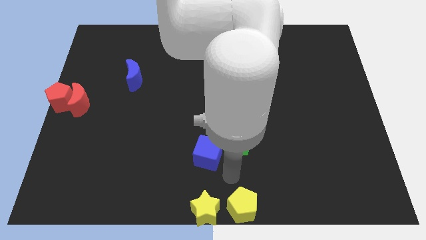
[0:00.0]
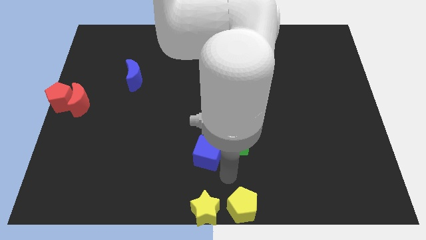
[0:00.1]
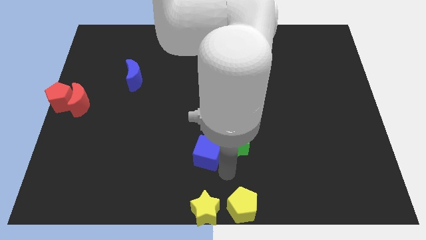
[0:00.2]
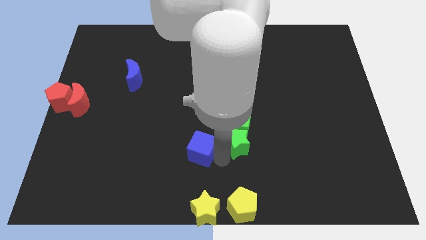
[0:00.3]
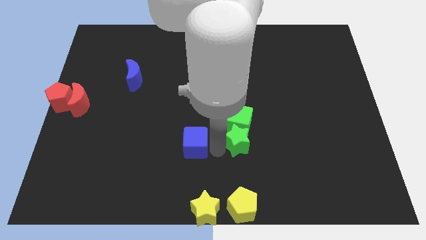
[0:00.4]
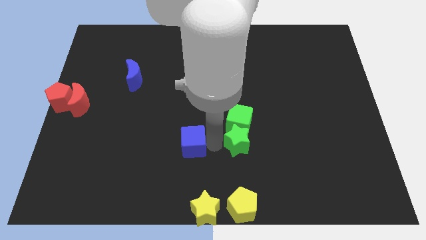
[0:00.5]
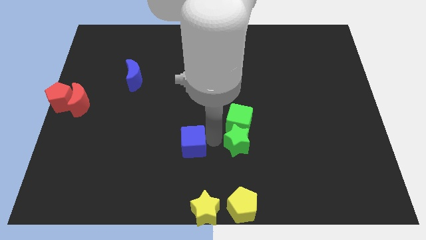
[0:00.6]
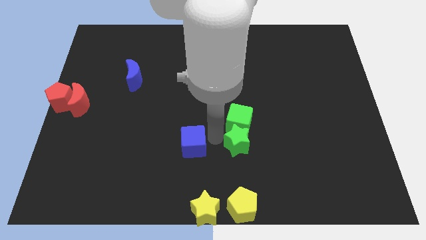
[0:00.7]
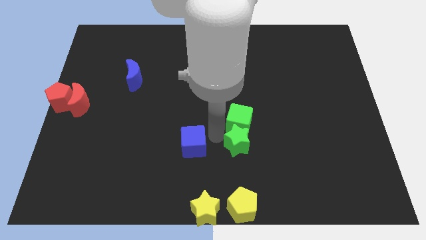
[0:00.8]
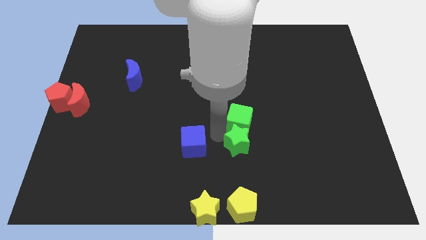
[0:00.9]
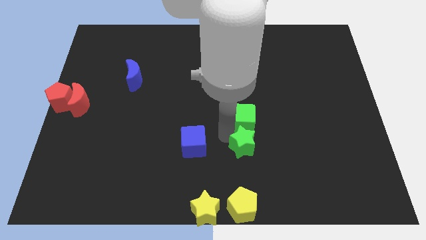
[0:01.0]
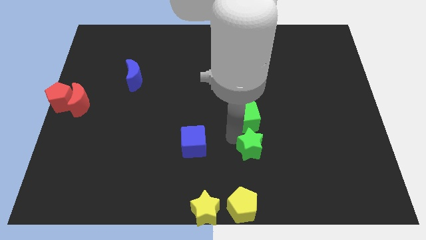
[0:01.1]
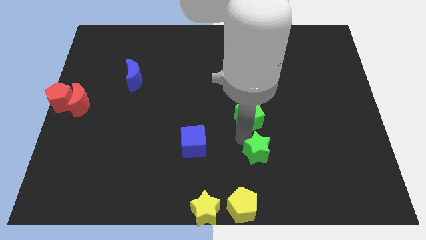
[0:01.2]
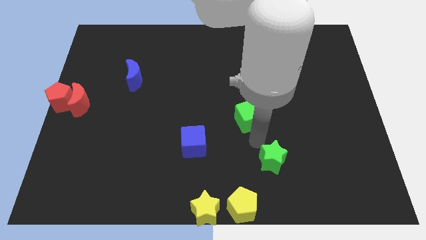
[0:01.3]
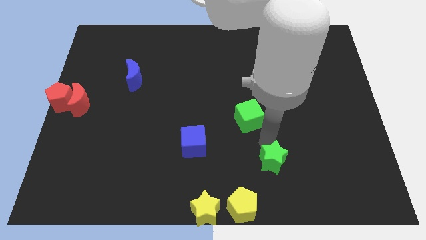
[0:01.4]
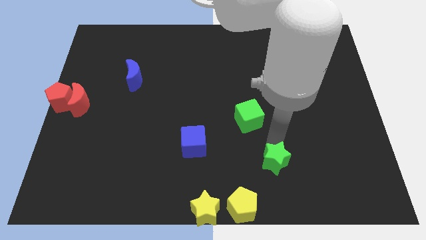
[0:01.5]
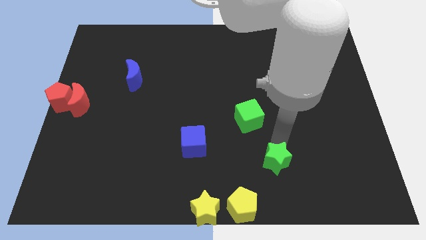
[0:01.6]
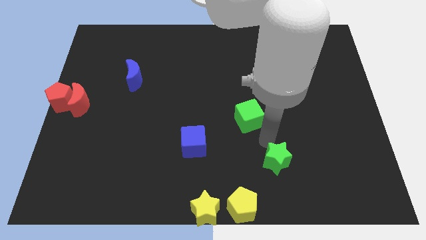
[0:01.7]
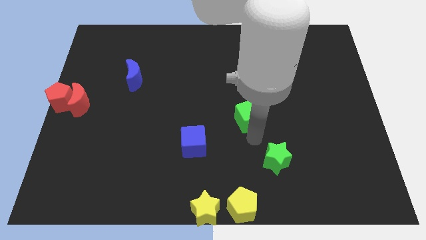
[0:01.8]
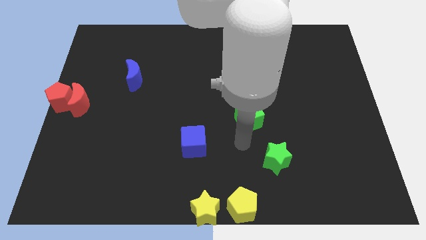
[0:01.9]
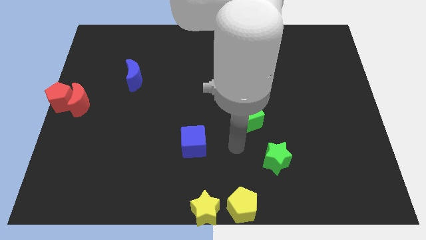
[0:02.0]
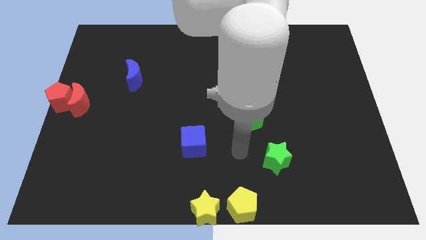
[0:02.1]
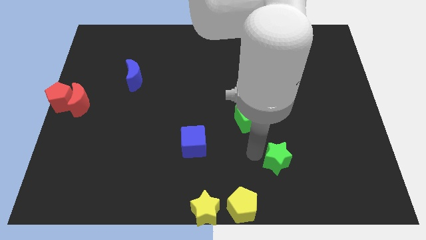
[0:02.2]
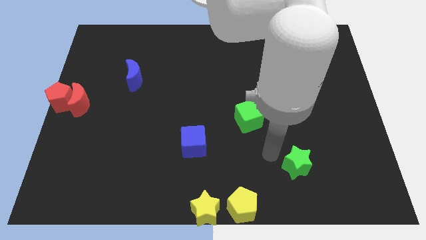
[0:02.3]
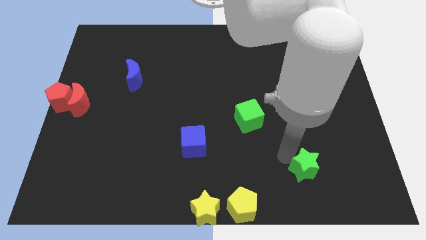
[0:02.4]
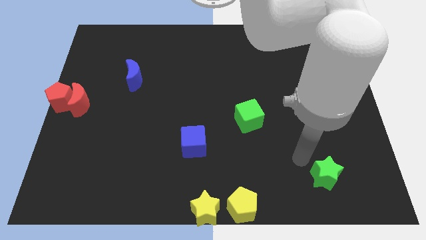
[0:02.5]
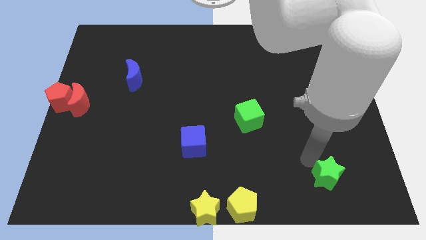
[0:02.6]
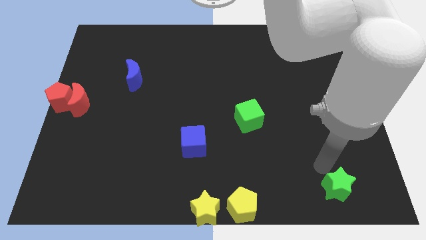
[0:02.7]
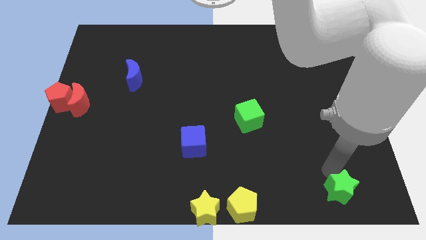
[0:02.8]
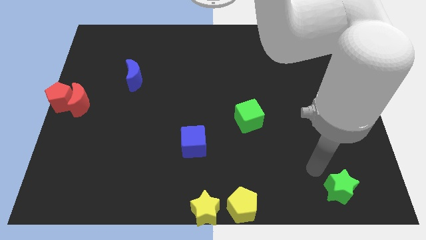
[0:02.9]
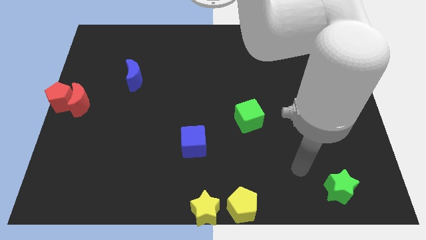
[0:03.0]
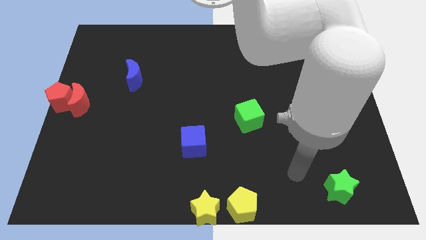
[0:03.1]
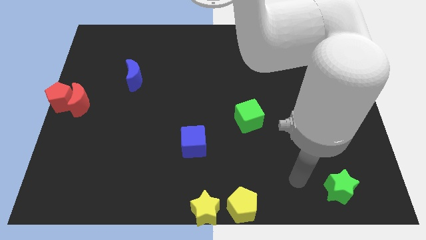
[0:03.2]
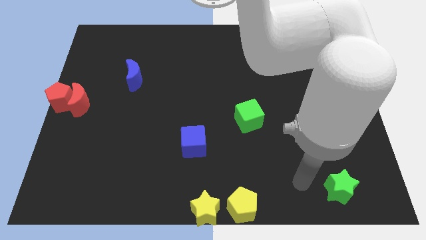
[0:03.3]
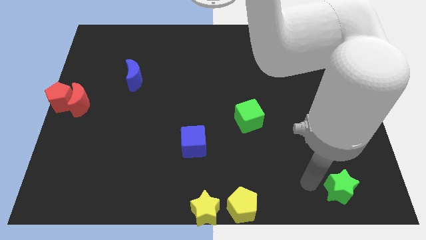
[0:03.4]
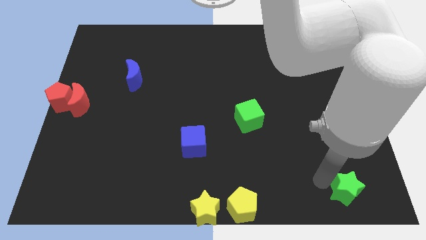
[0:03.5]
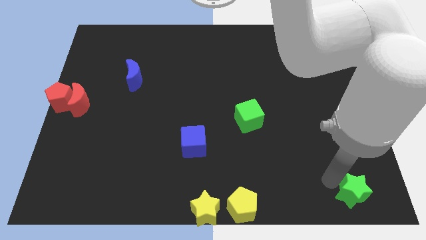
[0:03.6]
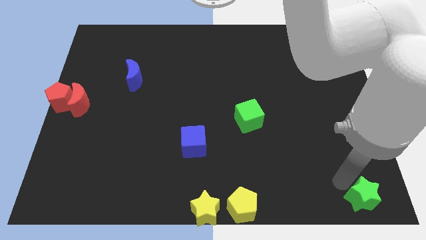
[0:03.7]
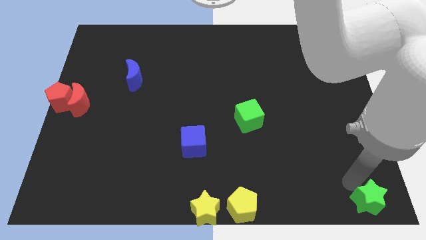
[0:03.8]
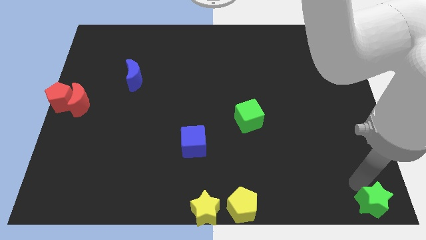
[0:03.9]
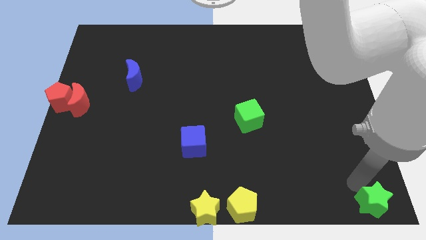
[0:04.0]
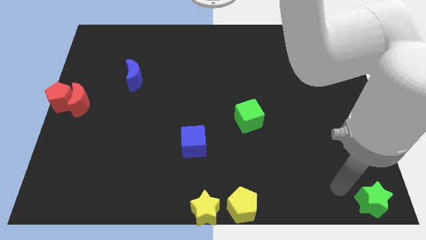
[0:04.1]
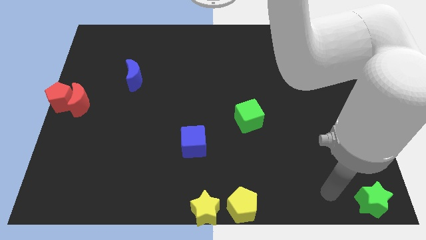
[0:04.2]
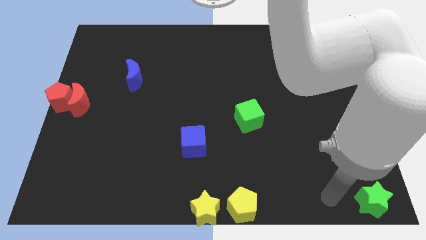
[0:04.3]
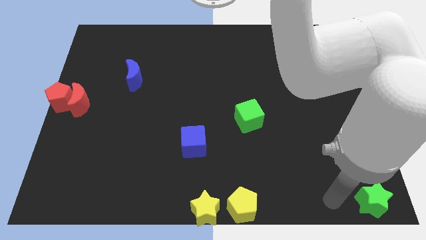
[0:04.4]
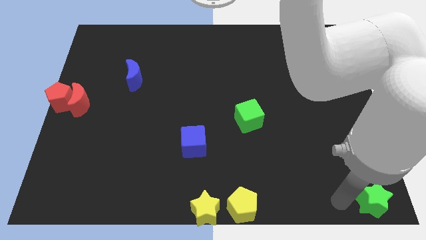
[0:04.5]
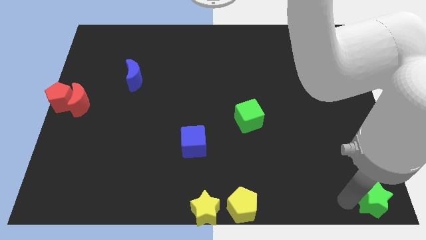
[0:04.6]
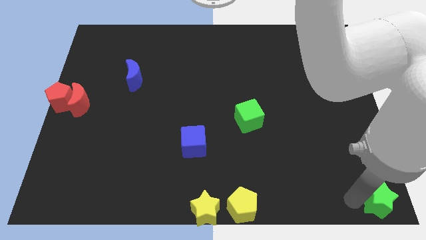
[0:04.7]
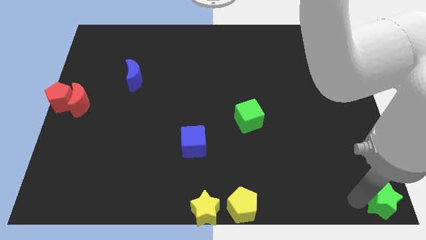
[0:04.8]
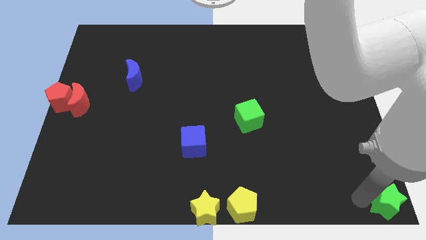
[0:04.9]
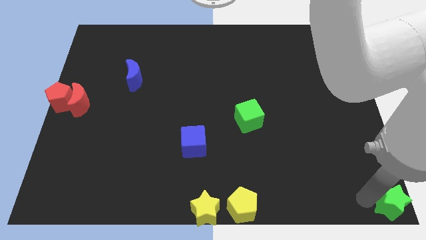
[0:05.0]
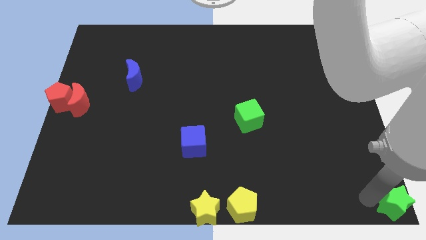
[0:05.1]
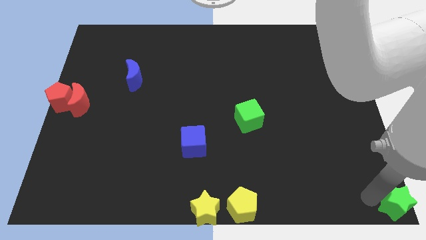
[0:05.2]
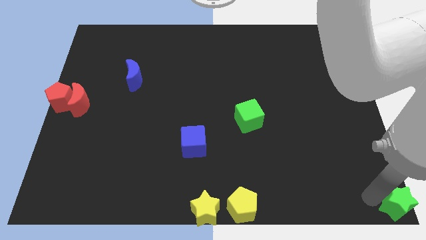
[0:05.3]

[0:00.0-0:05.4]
move the green star to the bottom right corner of the table

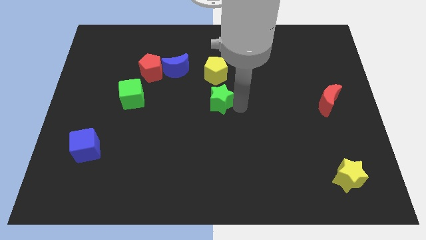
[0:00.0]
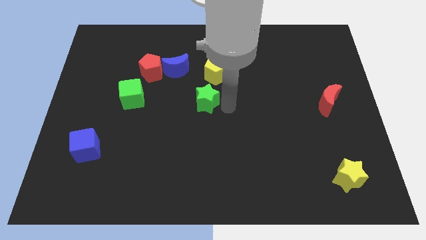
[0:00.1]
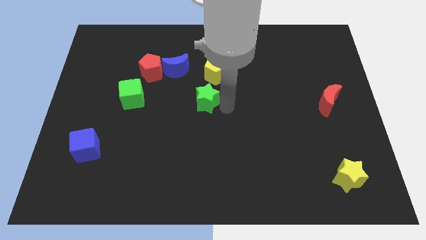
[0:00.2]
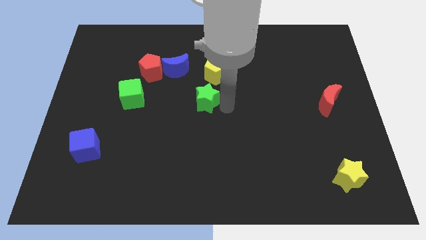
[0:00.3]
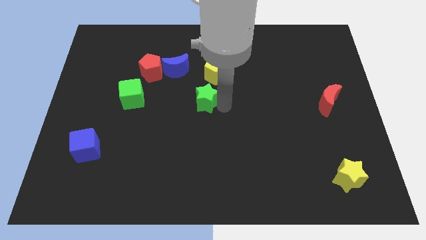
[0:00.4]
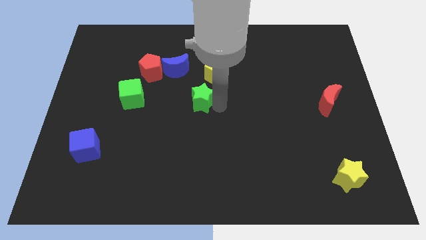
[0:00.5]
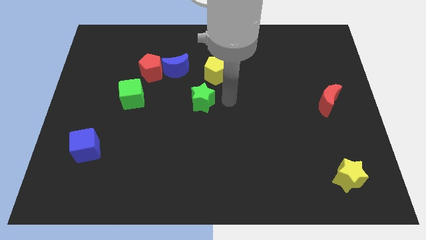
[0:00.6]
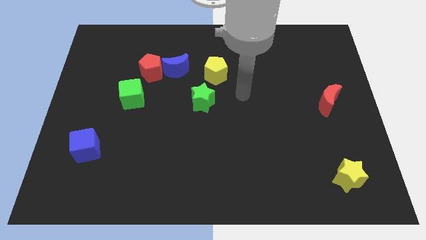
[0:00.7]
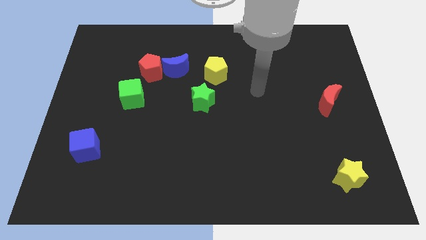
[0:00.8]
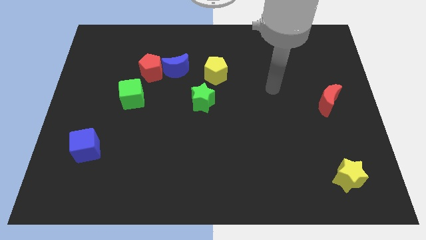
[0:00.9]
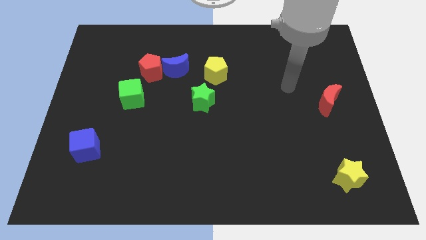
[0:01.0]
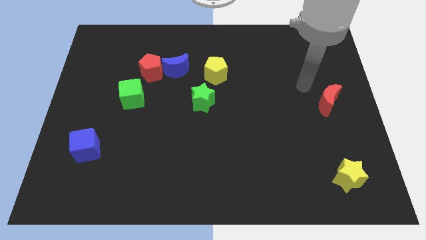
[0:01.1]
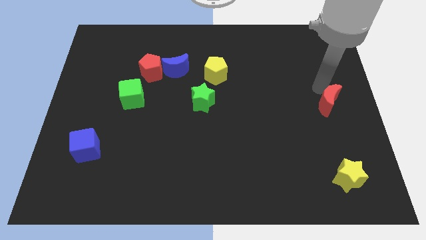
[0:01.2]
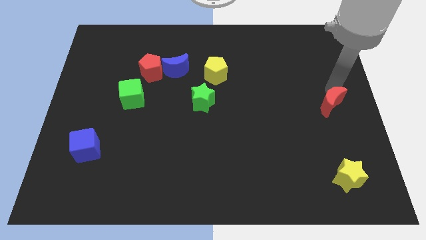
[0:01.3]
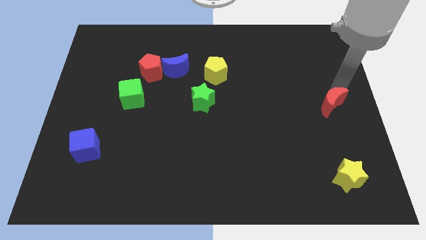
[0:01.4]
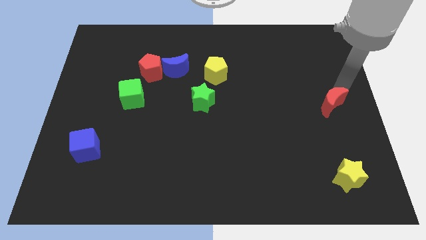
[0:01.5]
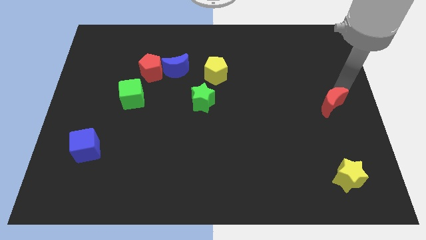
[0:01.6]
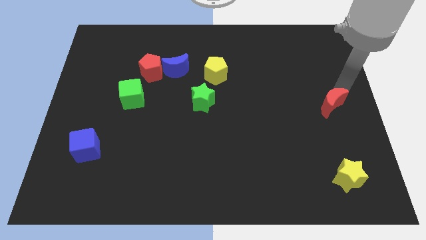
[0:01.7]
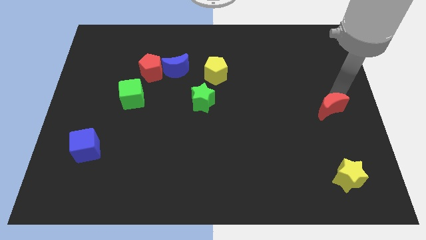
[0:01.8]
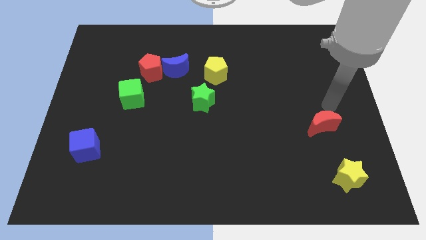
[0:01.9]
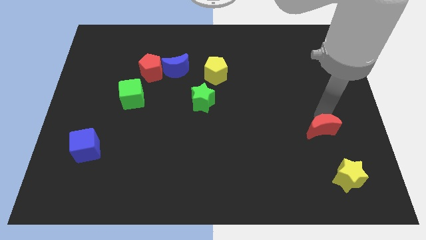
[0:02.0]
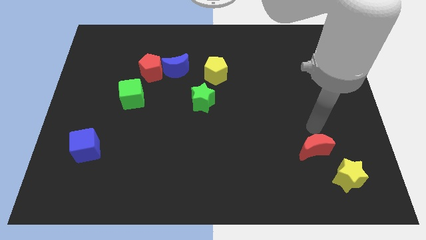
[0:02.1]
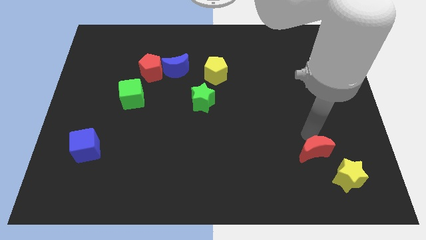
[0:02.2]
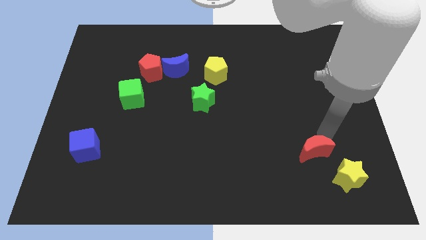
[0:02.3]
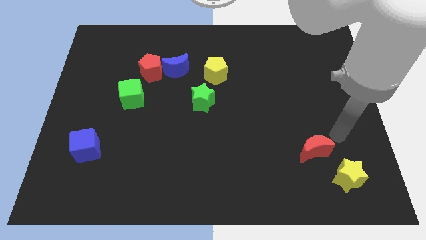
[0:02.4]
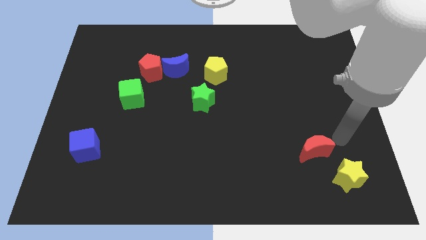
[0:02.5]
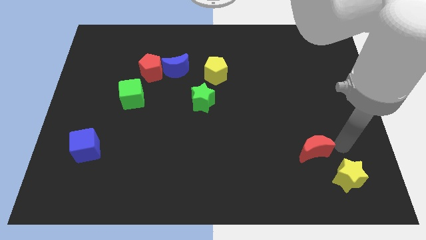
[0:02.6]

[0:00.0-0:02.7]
push red crescent towards yellow star

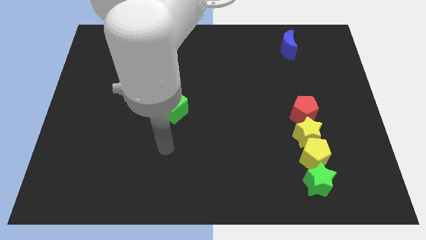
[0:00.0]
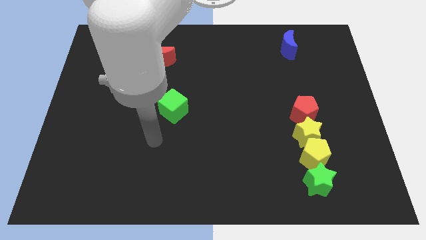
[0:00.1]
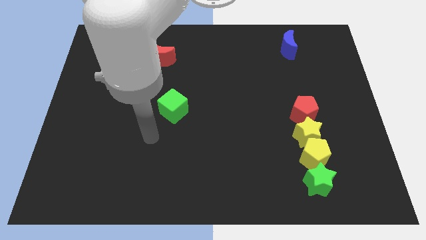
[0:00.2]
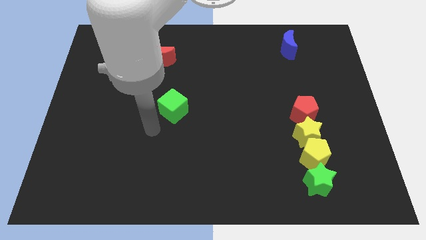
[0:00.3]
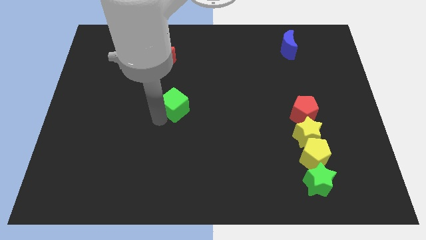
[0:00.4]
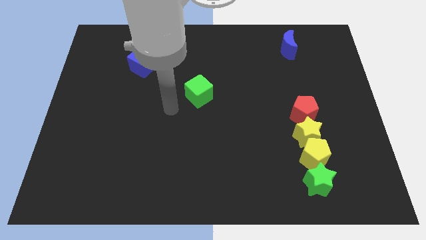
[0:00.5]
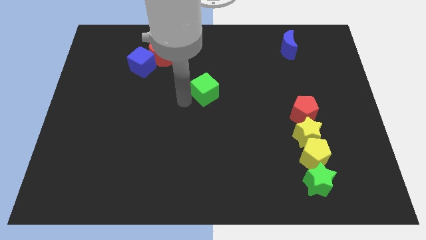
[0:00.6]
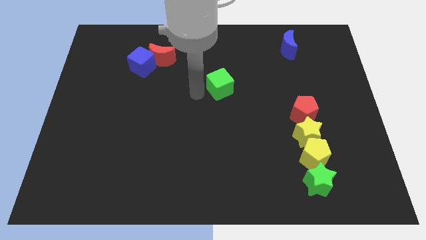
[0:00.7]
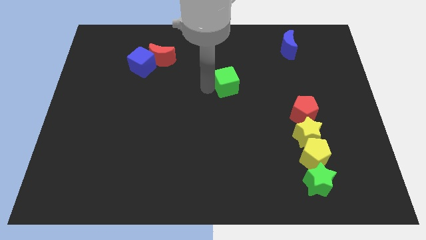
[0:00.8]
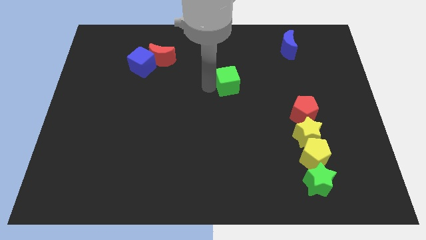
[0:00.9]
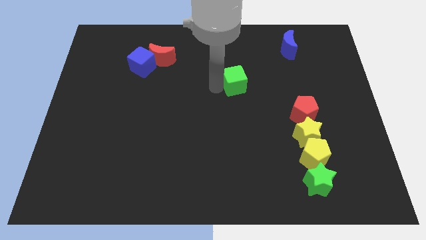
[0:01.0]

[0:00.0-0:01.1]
slide the green cube towards the right side of the board
